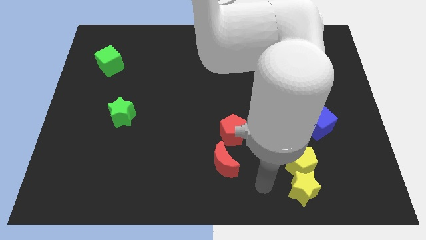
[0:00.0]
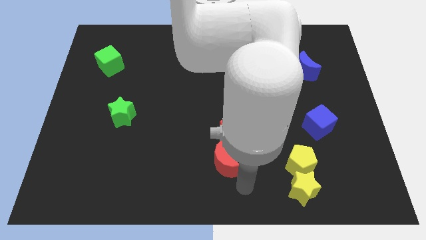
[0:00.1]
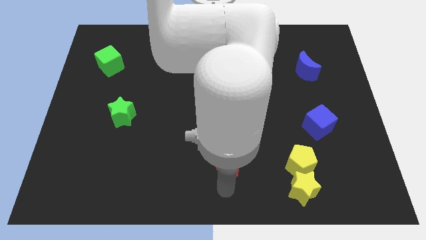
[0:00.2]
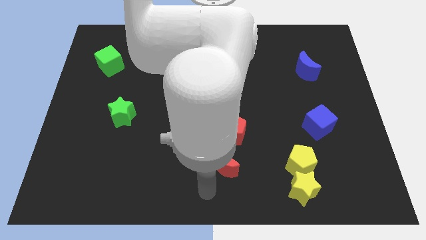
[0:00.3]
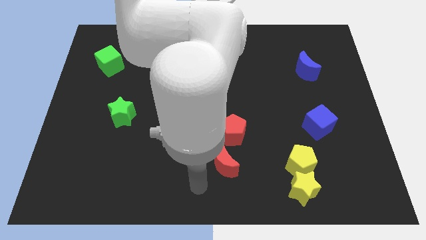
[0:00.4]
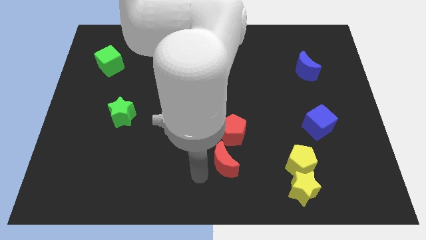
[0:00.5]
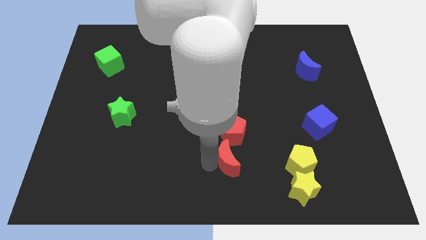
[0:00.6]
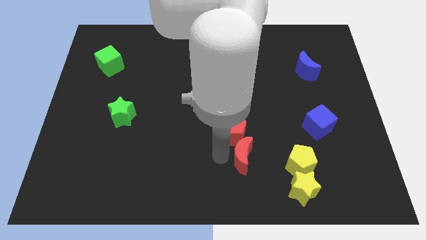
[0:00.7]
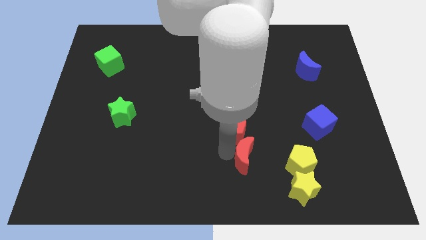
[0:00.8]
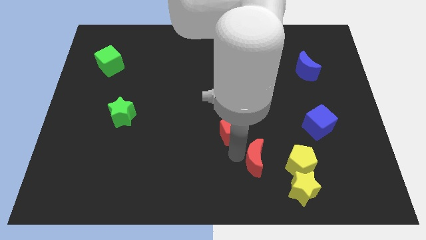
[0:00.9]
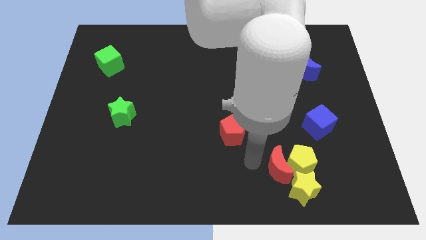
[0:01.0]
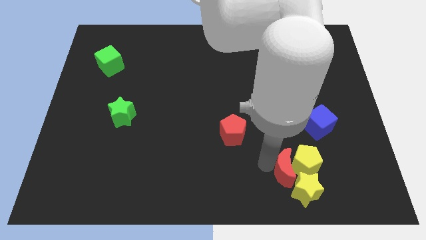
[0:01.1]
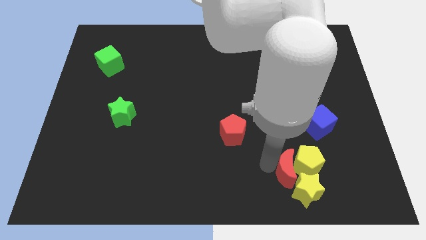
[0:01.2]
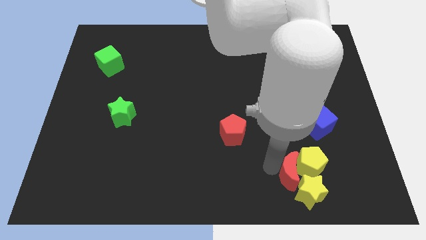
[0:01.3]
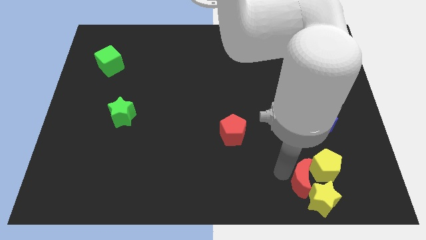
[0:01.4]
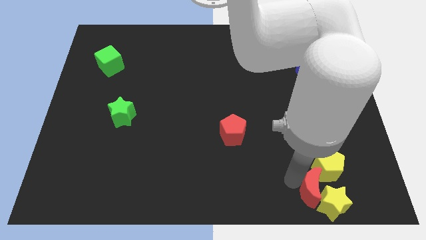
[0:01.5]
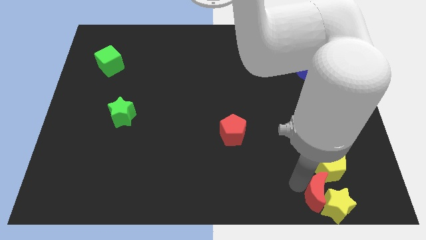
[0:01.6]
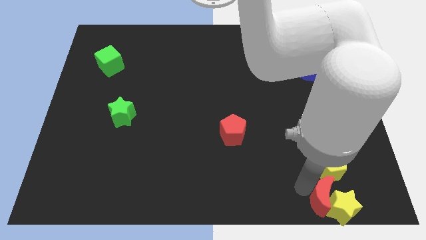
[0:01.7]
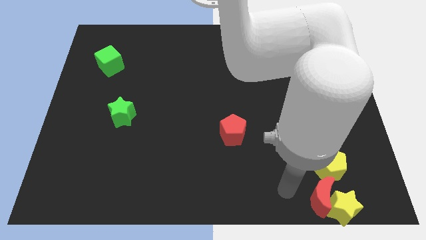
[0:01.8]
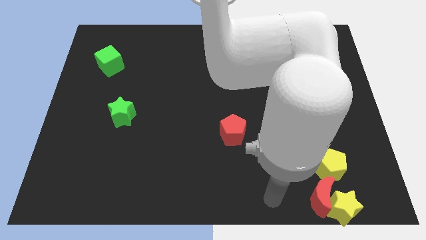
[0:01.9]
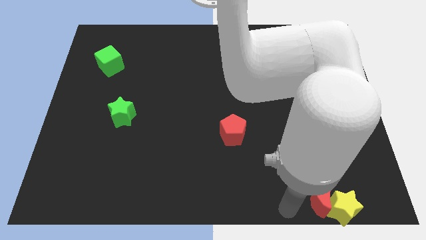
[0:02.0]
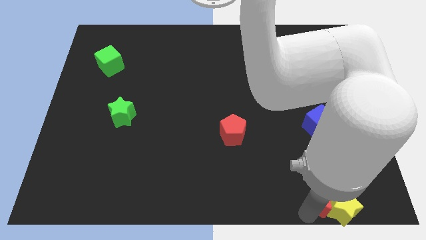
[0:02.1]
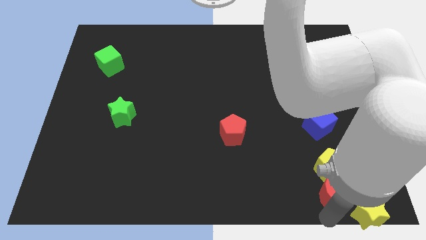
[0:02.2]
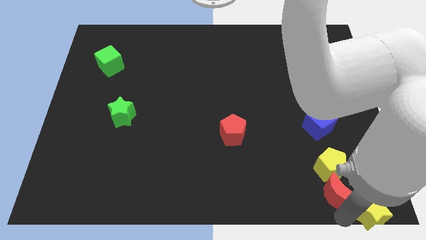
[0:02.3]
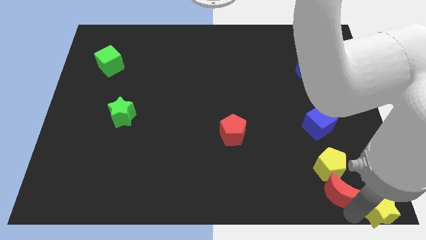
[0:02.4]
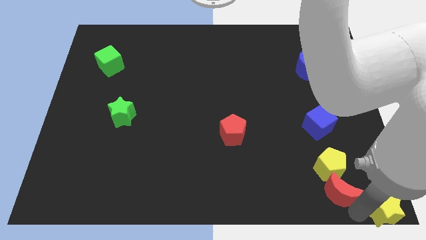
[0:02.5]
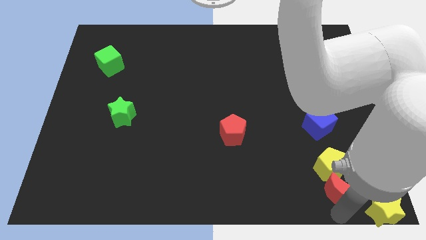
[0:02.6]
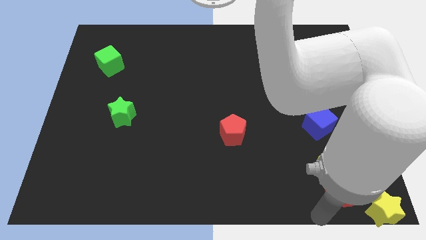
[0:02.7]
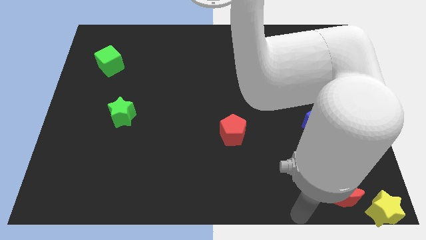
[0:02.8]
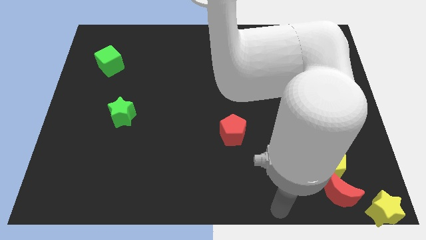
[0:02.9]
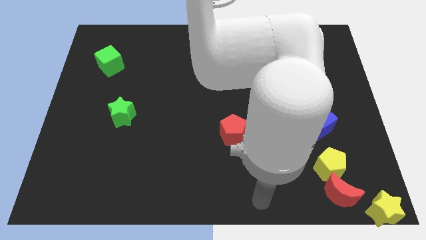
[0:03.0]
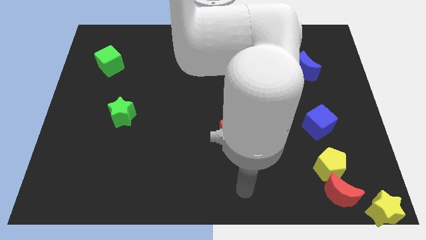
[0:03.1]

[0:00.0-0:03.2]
push the yellow star to the bottom right of the corner

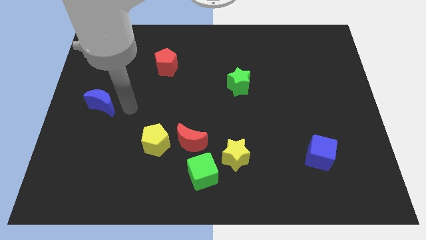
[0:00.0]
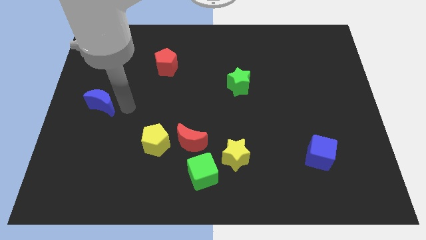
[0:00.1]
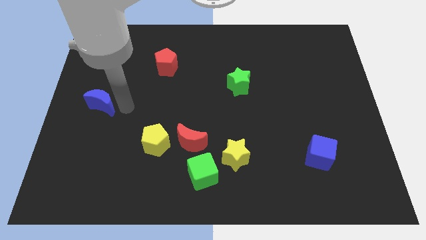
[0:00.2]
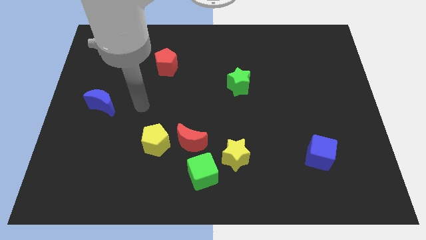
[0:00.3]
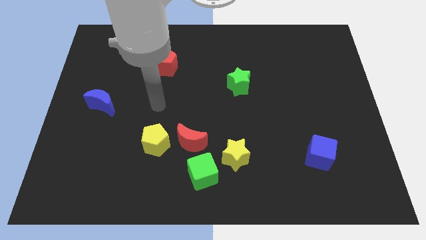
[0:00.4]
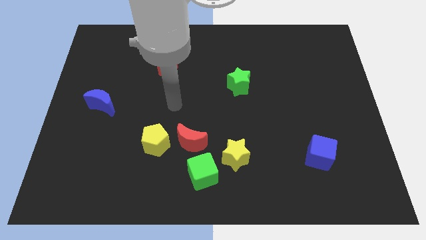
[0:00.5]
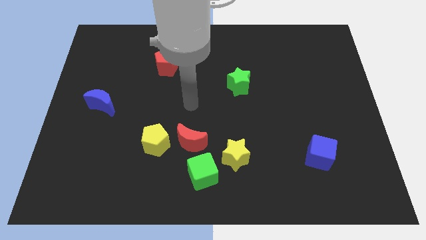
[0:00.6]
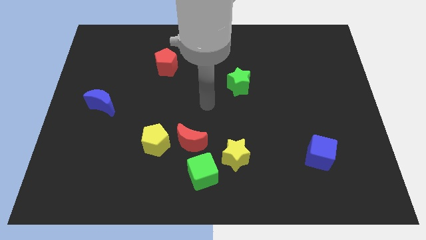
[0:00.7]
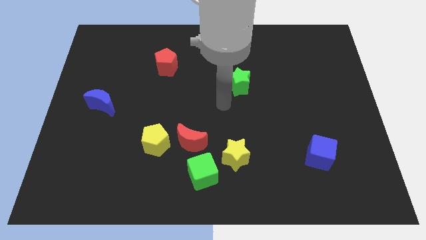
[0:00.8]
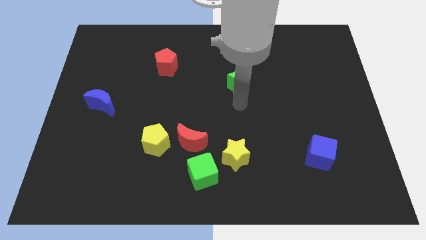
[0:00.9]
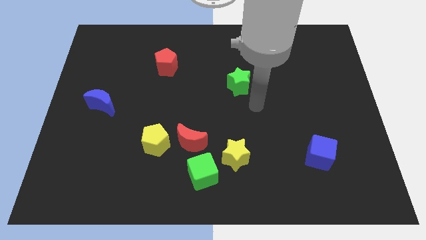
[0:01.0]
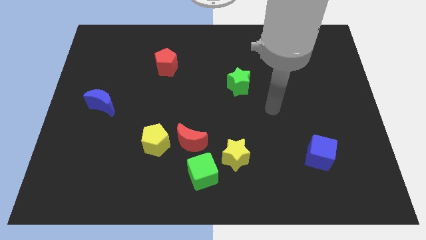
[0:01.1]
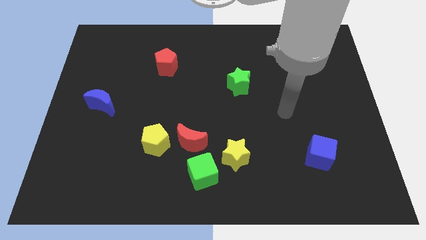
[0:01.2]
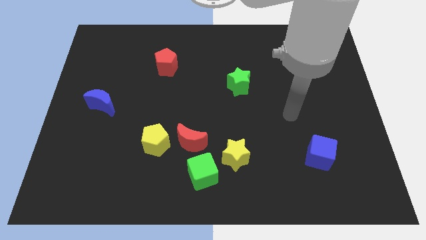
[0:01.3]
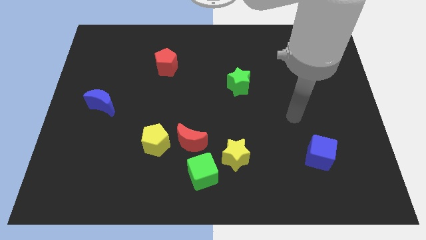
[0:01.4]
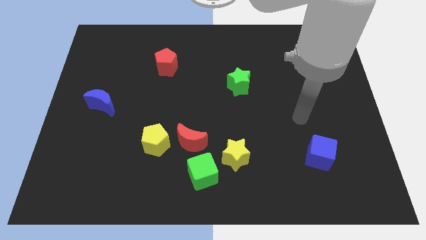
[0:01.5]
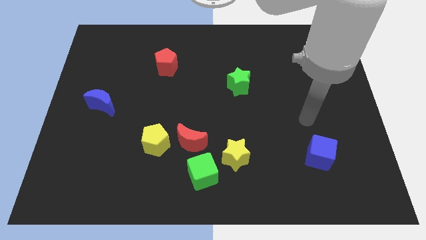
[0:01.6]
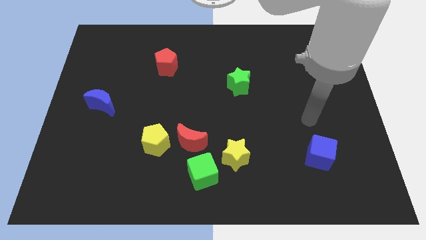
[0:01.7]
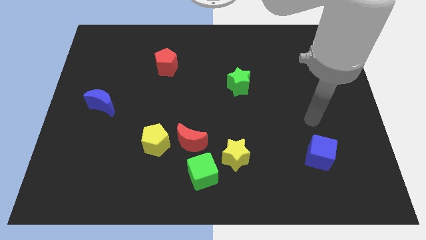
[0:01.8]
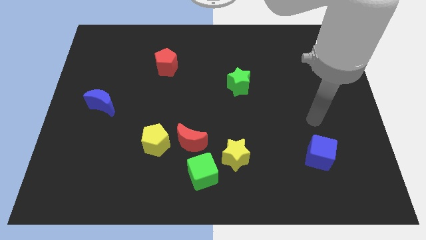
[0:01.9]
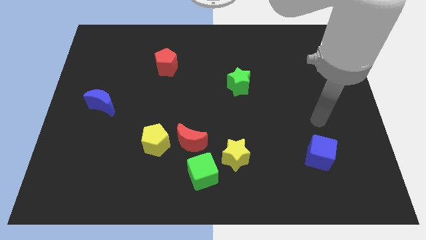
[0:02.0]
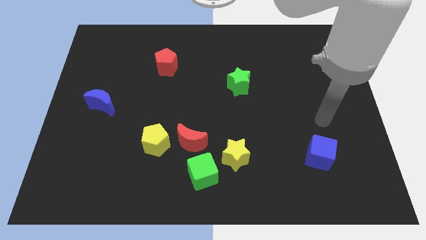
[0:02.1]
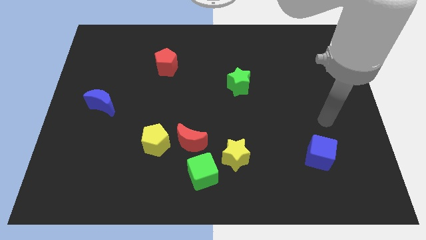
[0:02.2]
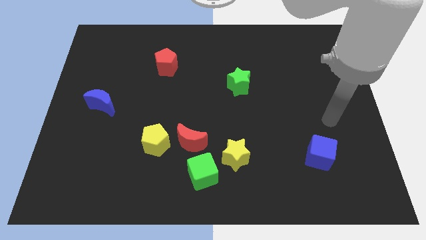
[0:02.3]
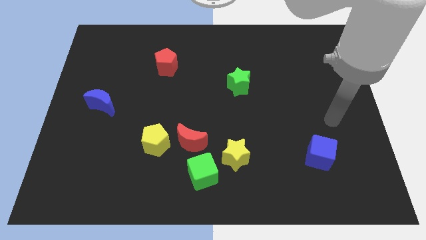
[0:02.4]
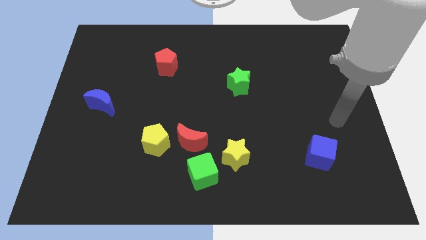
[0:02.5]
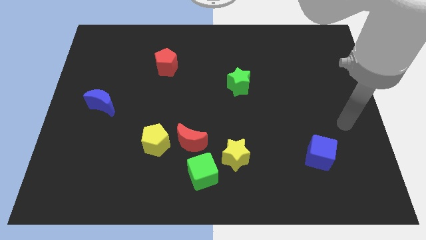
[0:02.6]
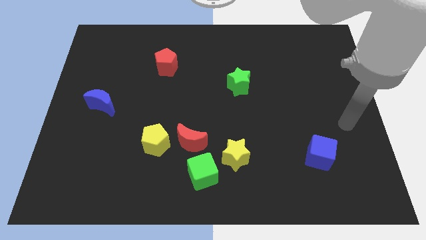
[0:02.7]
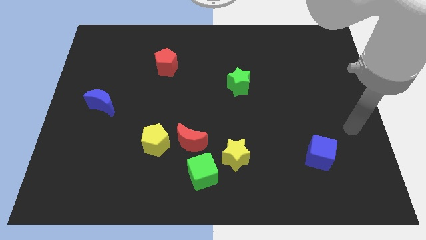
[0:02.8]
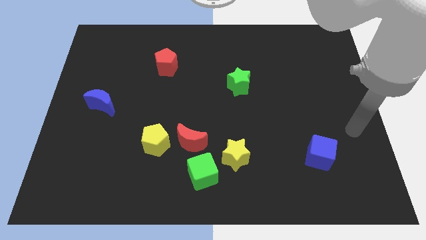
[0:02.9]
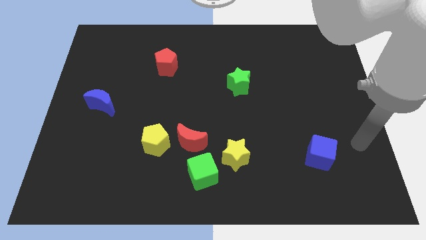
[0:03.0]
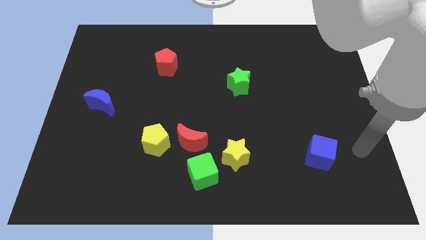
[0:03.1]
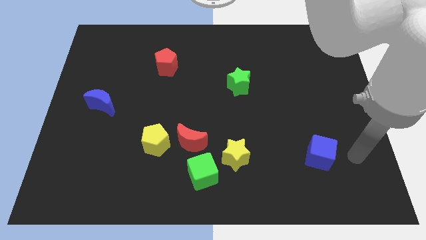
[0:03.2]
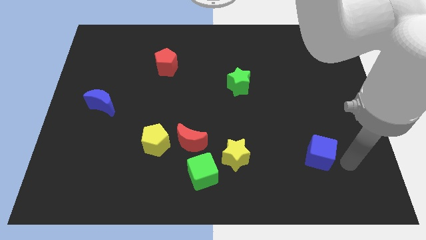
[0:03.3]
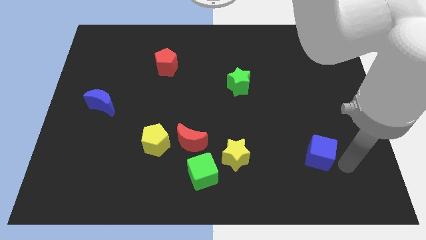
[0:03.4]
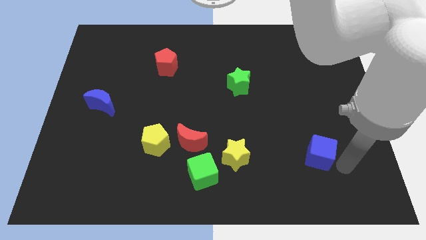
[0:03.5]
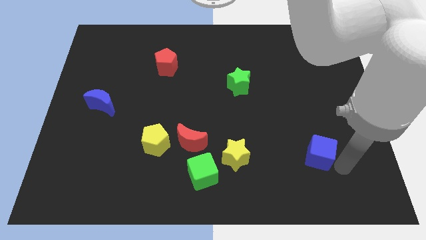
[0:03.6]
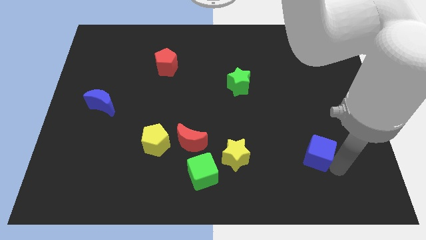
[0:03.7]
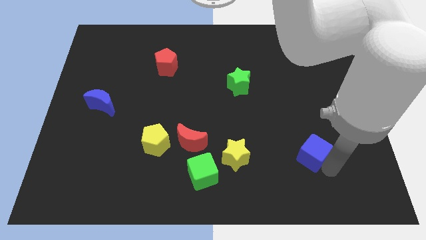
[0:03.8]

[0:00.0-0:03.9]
tap the right side of the blue cube

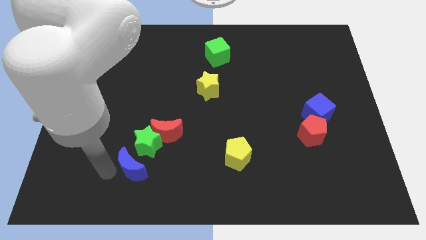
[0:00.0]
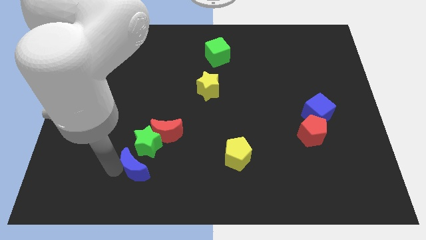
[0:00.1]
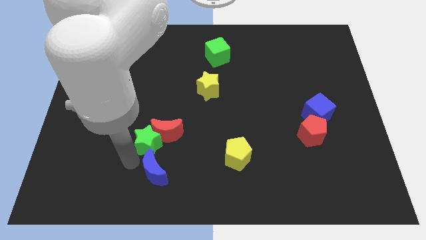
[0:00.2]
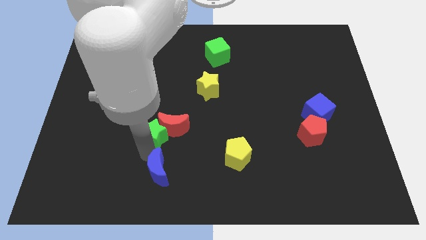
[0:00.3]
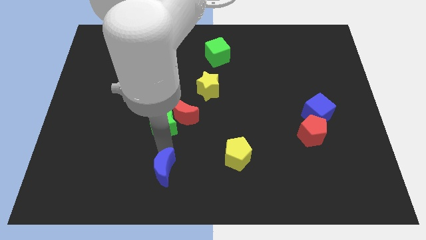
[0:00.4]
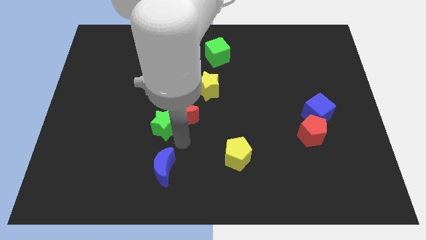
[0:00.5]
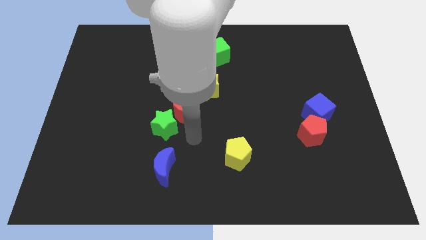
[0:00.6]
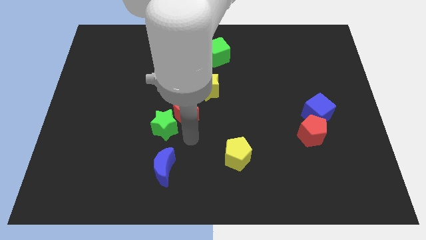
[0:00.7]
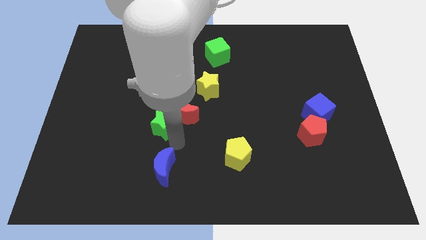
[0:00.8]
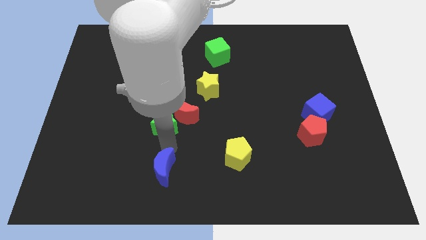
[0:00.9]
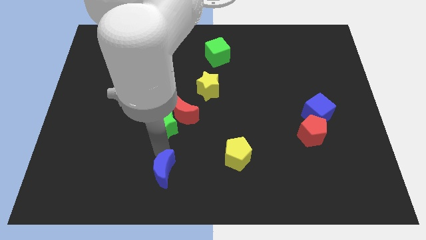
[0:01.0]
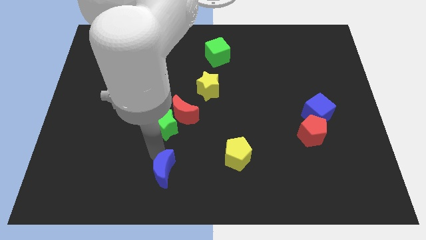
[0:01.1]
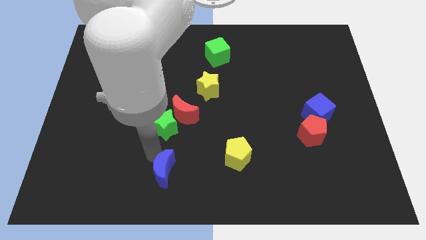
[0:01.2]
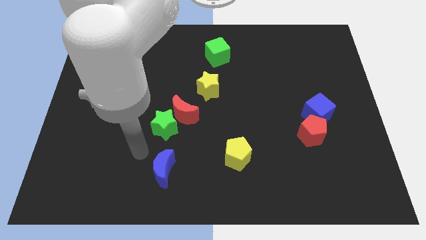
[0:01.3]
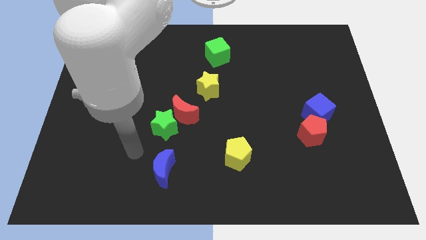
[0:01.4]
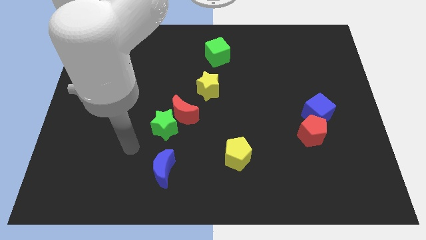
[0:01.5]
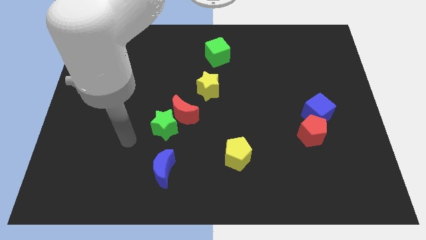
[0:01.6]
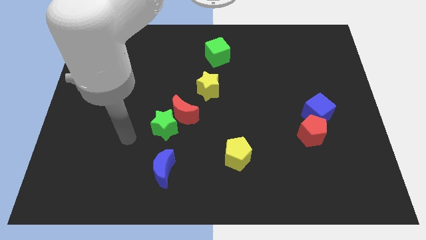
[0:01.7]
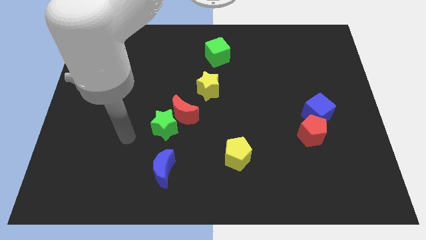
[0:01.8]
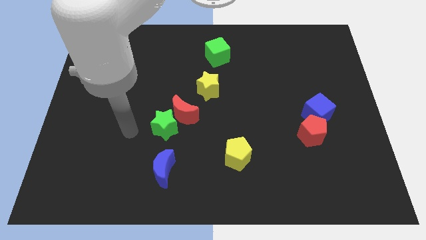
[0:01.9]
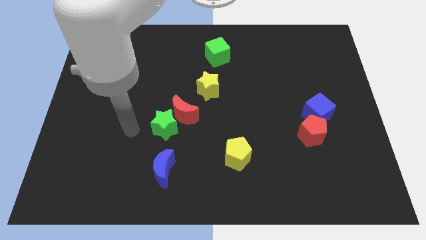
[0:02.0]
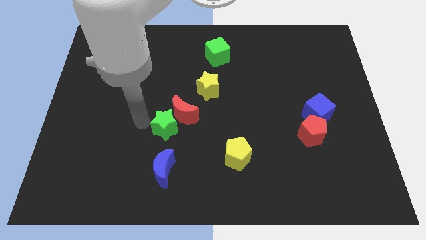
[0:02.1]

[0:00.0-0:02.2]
slightly push the blue crescent towards the left of the yellow pentagon
